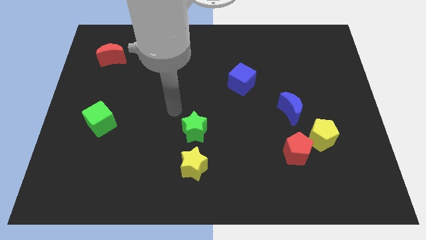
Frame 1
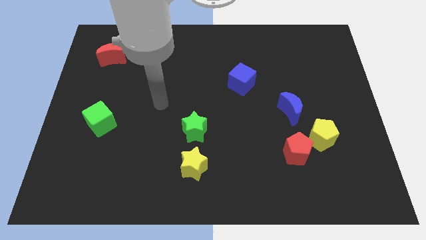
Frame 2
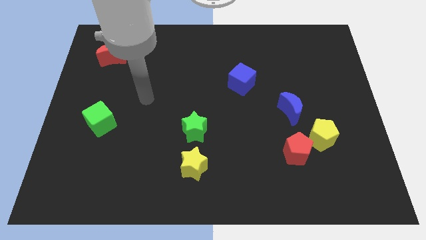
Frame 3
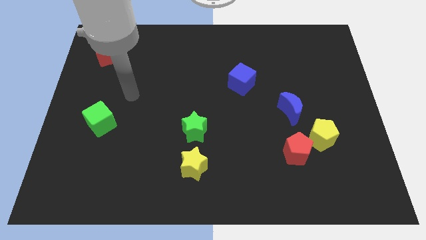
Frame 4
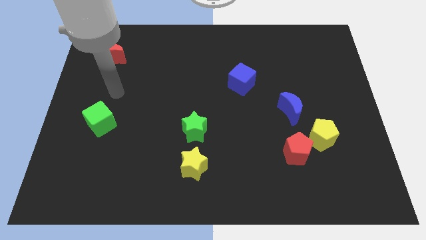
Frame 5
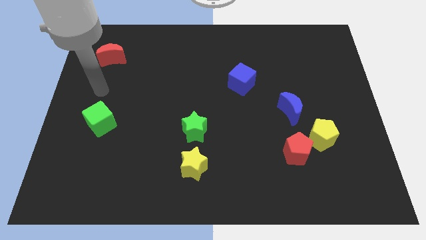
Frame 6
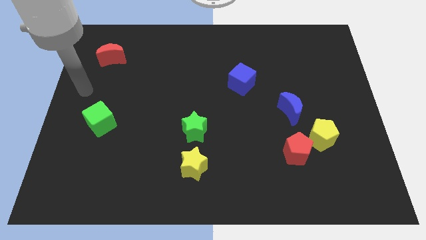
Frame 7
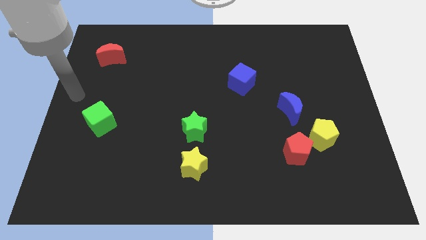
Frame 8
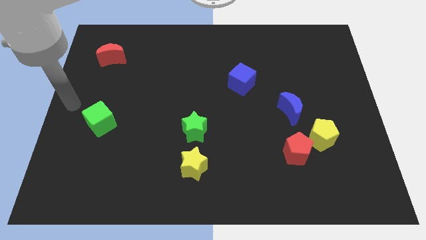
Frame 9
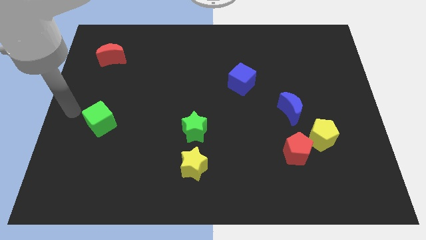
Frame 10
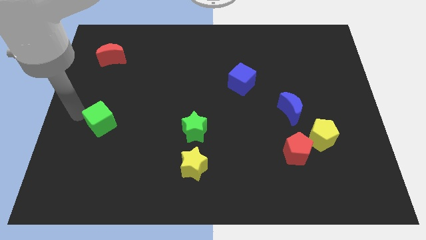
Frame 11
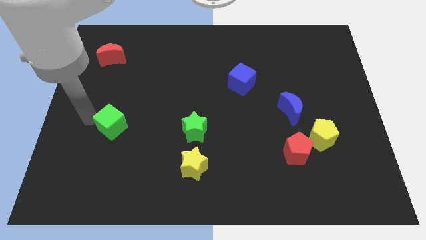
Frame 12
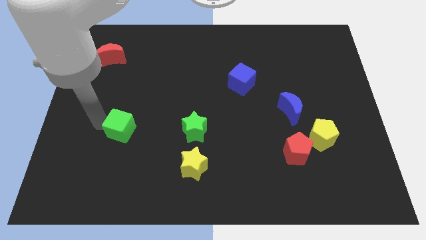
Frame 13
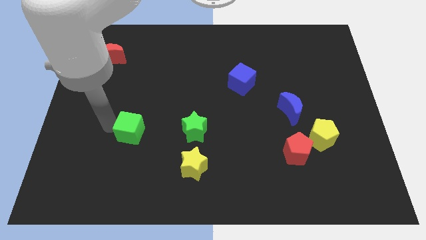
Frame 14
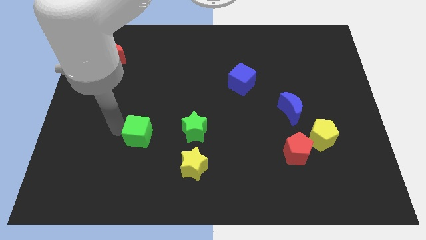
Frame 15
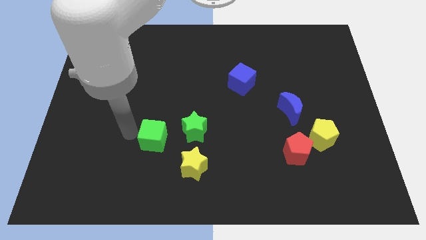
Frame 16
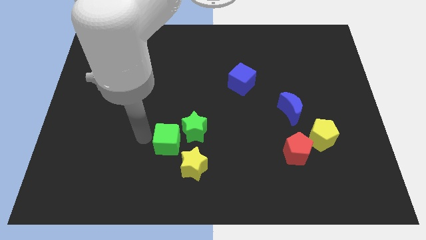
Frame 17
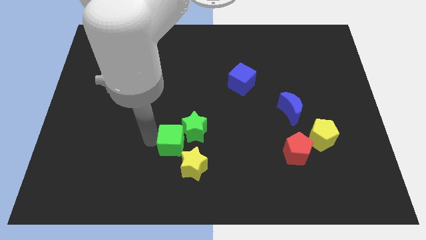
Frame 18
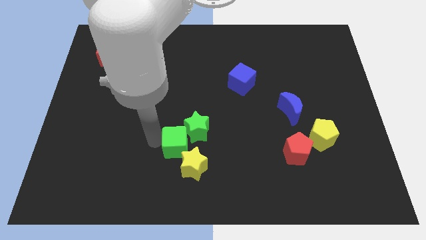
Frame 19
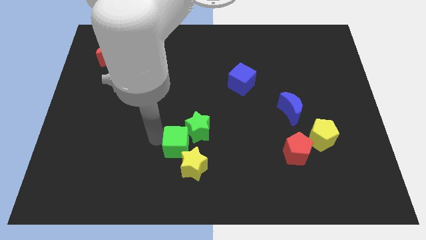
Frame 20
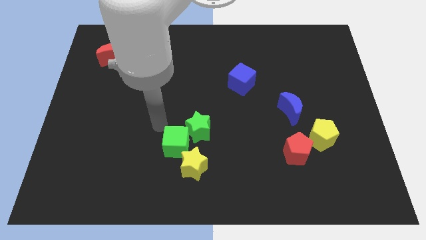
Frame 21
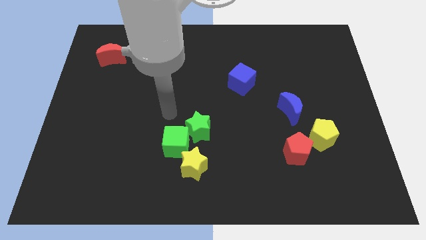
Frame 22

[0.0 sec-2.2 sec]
slide the green cube diagonally bottom right to the red moon

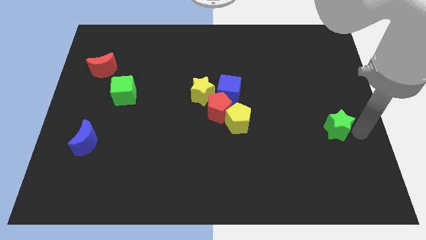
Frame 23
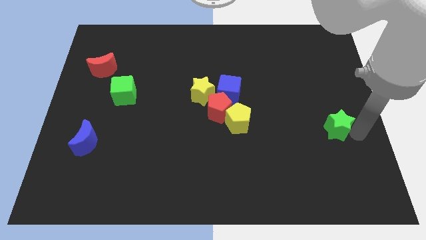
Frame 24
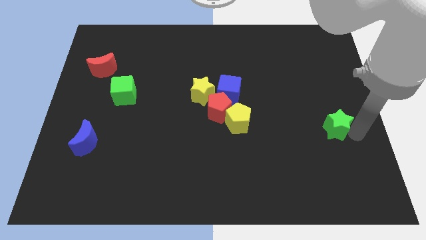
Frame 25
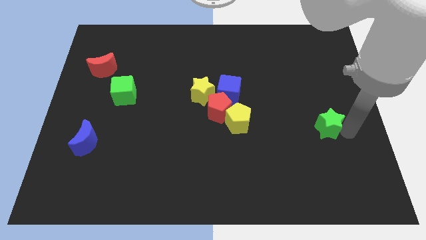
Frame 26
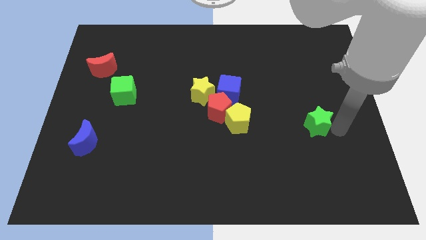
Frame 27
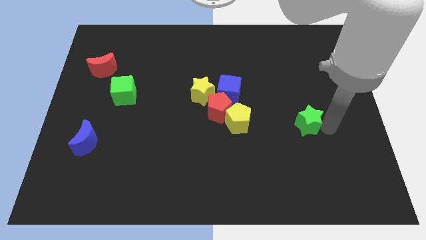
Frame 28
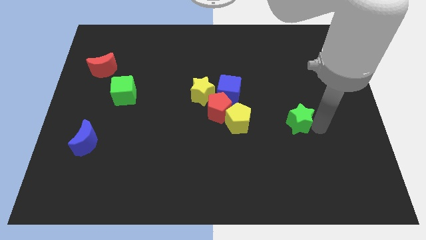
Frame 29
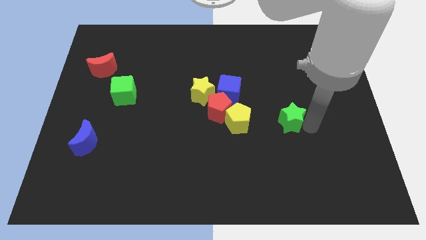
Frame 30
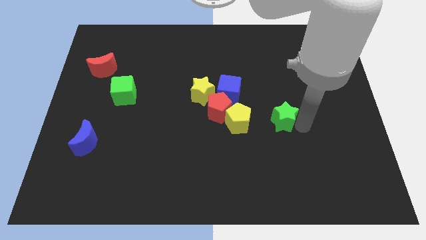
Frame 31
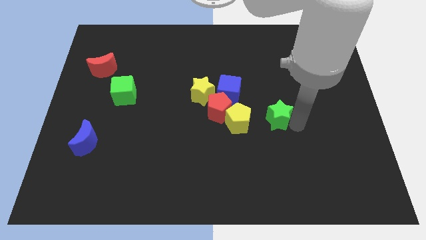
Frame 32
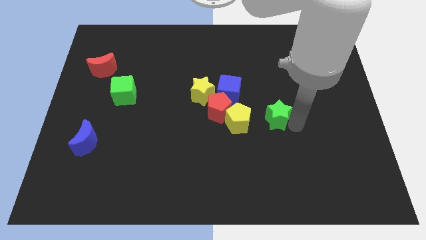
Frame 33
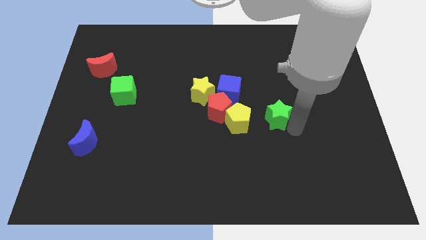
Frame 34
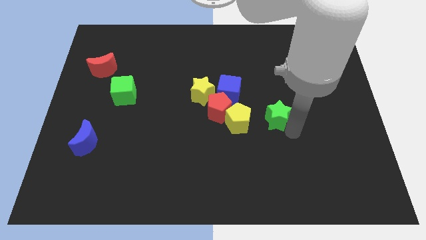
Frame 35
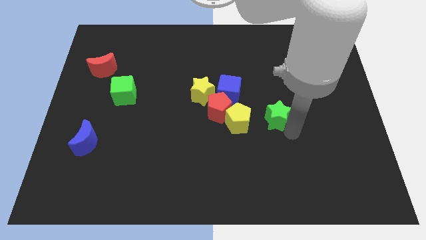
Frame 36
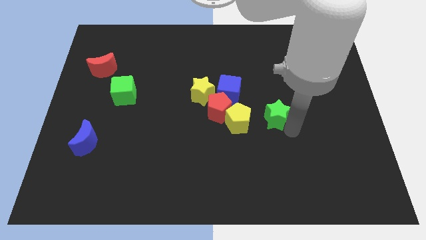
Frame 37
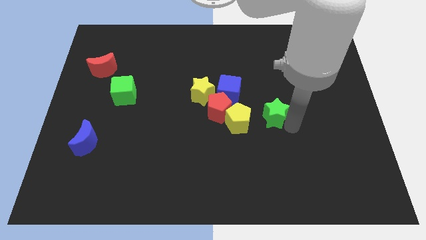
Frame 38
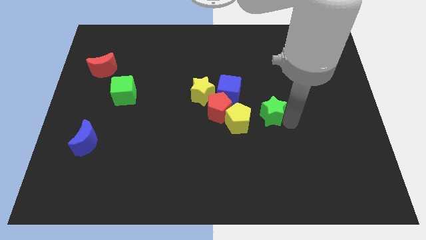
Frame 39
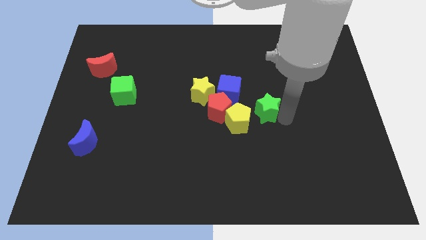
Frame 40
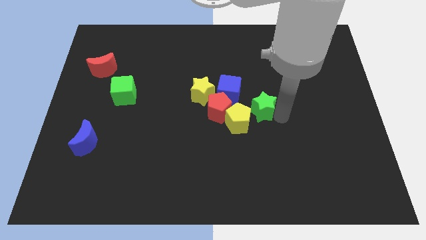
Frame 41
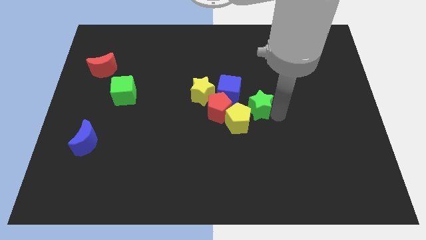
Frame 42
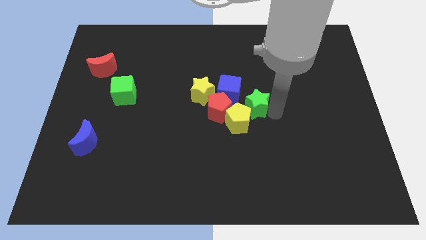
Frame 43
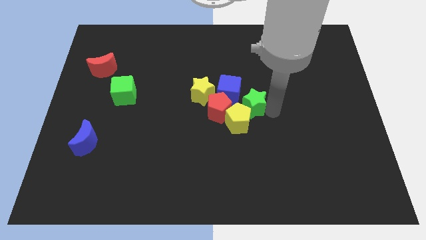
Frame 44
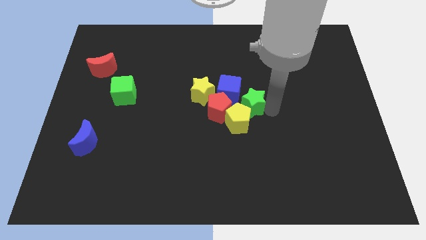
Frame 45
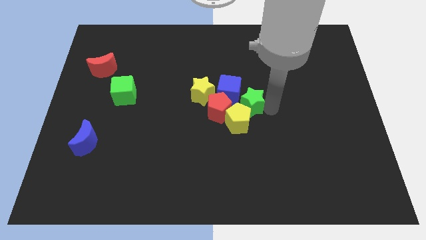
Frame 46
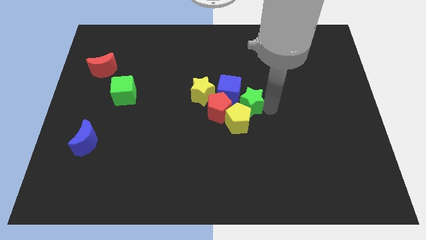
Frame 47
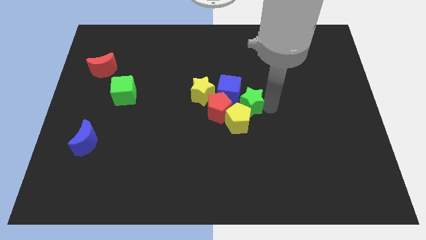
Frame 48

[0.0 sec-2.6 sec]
place green star above yellow pentagon

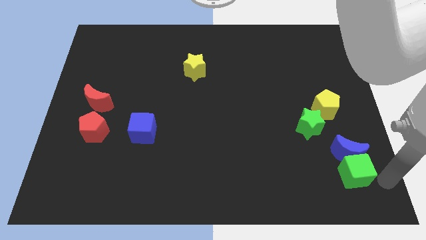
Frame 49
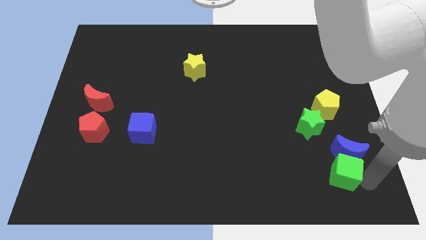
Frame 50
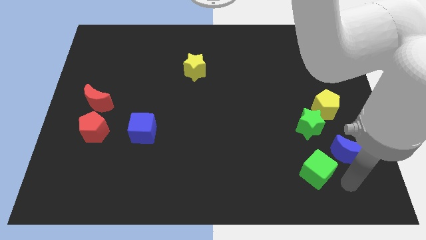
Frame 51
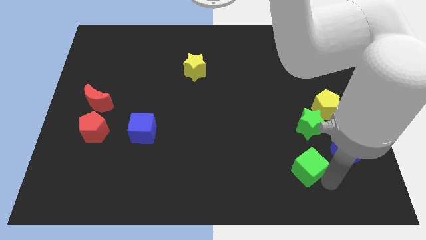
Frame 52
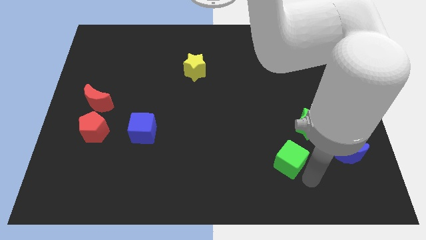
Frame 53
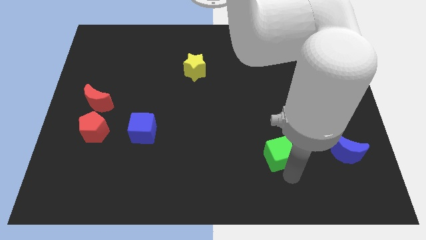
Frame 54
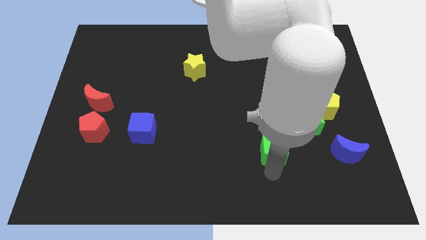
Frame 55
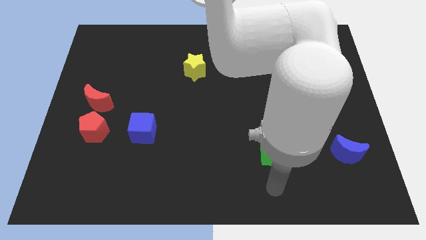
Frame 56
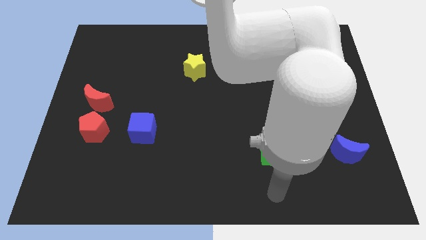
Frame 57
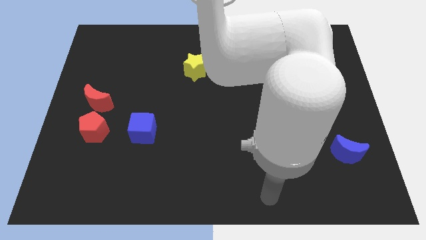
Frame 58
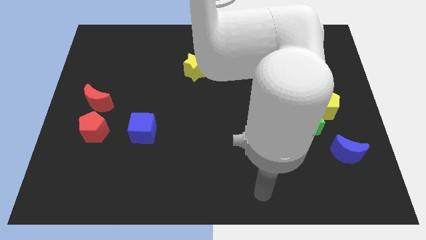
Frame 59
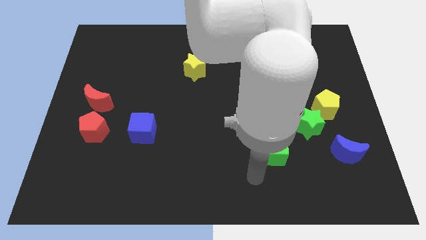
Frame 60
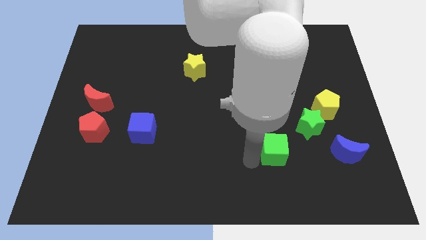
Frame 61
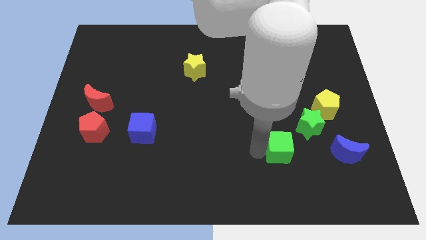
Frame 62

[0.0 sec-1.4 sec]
move the green star parallel to the green star

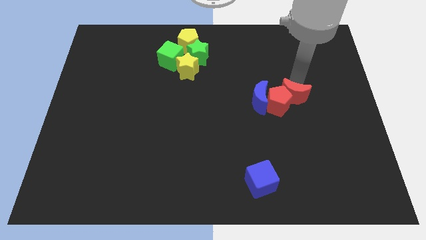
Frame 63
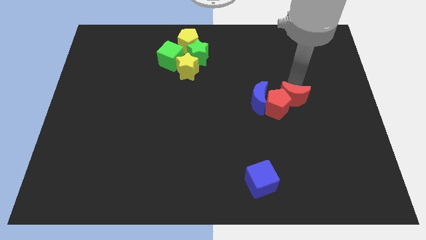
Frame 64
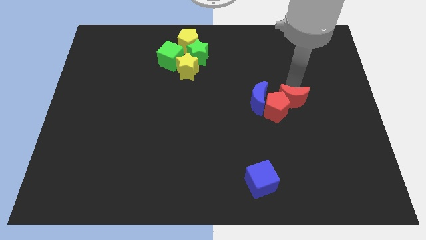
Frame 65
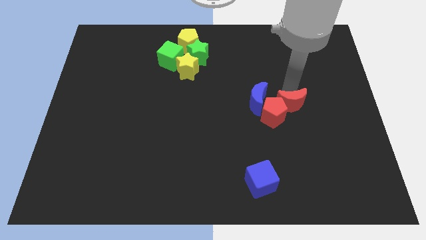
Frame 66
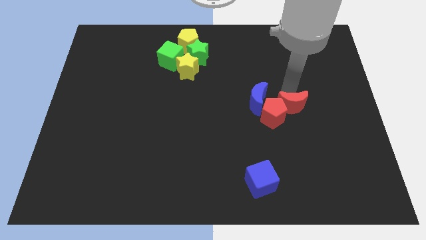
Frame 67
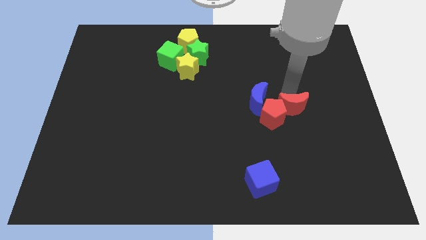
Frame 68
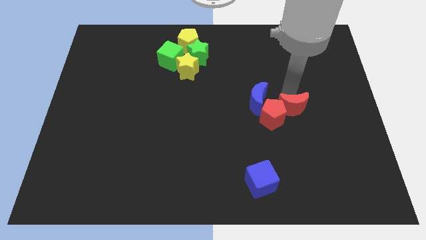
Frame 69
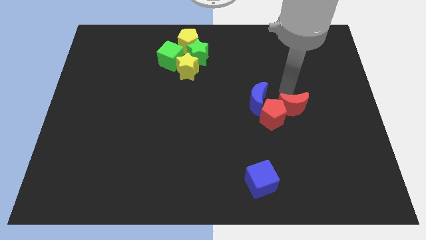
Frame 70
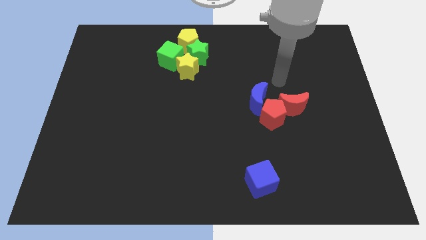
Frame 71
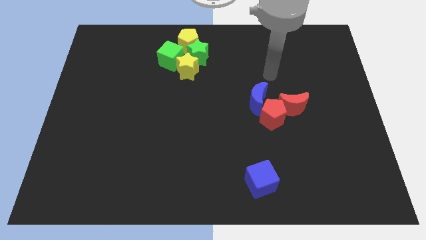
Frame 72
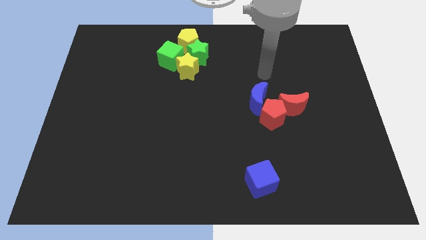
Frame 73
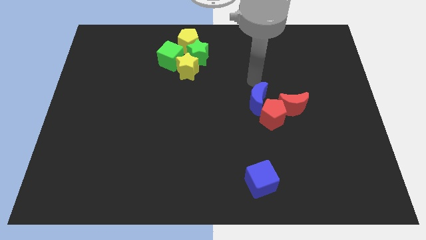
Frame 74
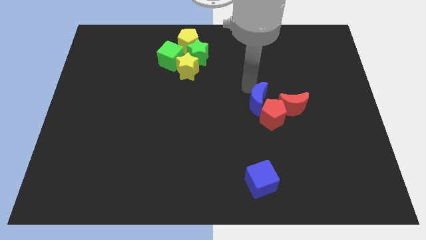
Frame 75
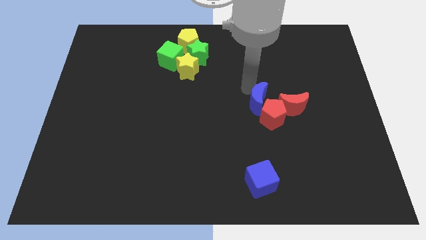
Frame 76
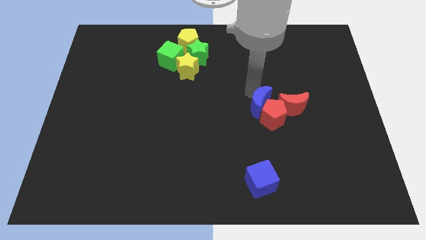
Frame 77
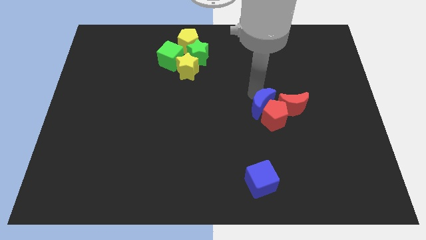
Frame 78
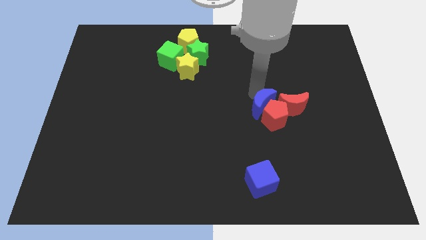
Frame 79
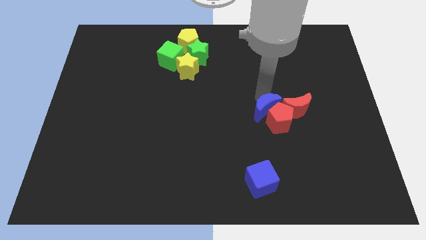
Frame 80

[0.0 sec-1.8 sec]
move blue moon to the top left of red pentagon

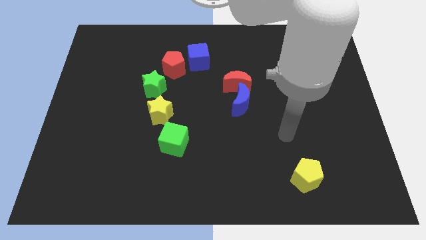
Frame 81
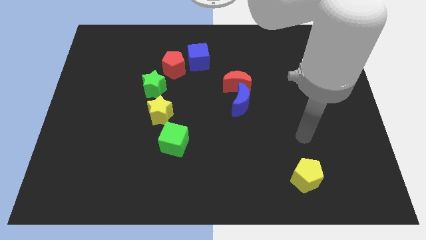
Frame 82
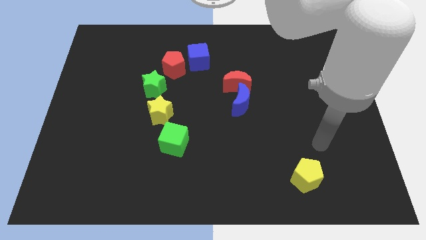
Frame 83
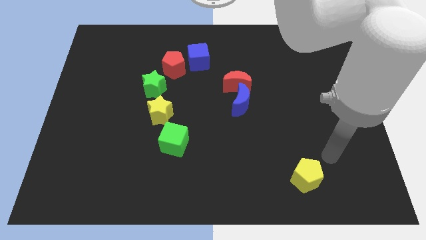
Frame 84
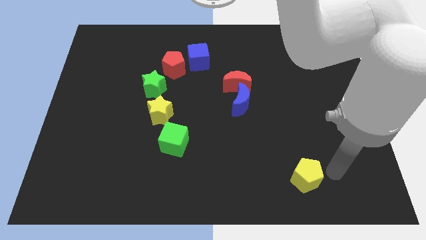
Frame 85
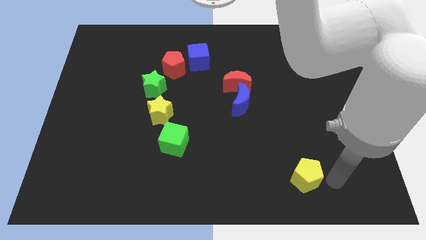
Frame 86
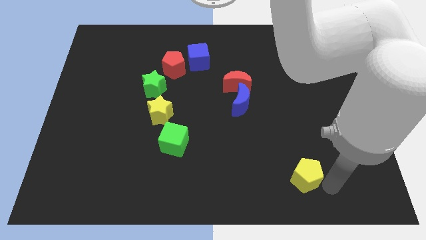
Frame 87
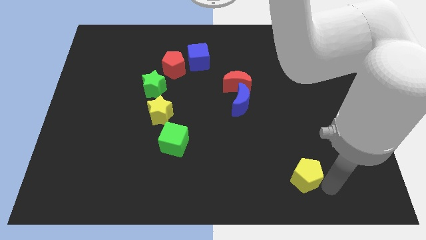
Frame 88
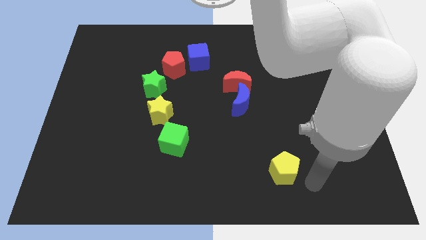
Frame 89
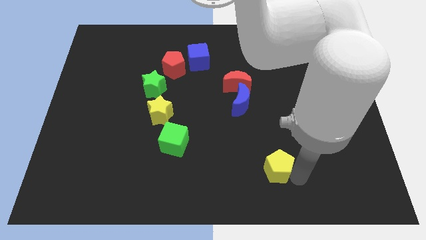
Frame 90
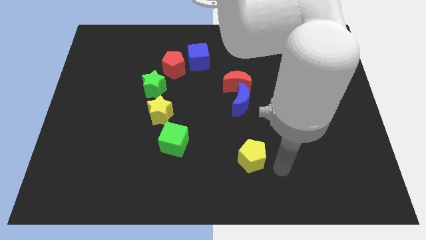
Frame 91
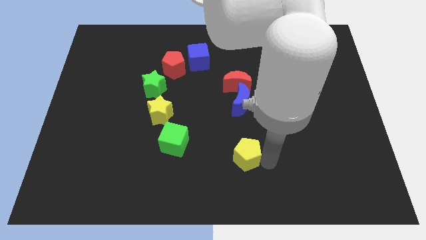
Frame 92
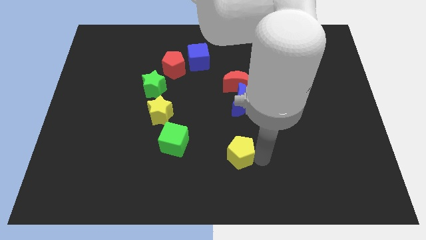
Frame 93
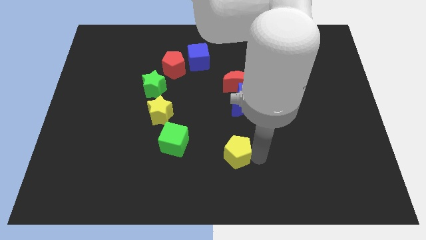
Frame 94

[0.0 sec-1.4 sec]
move the yellow pentagon to the bottom side of the blue crescent
